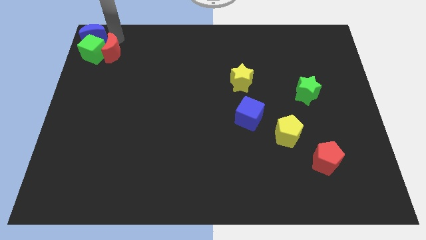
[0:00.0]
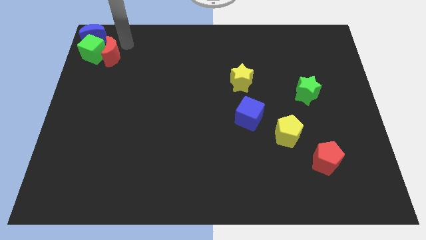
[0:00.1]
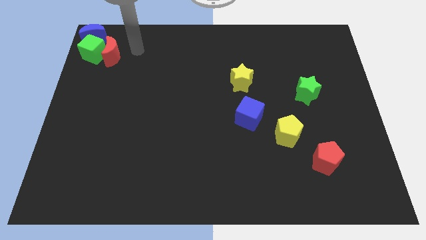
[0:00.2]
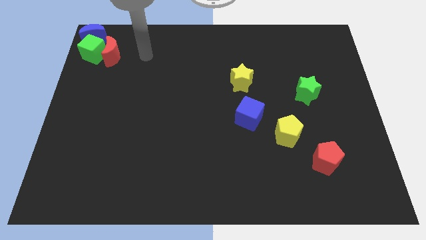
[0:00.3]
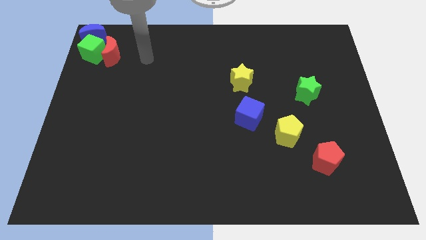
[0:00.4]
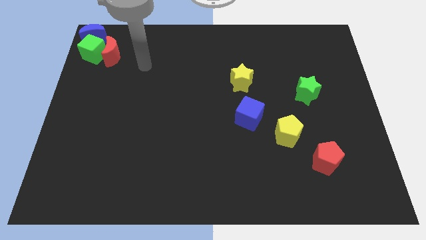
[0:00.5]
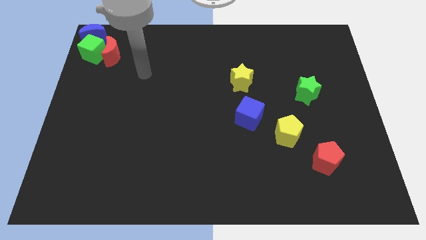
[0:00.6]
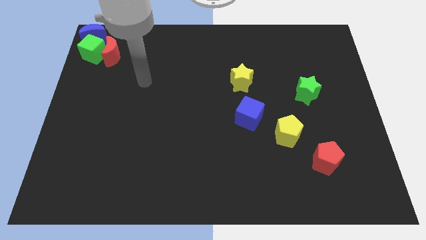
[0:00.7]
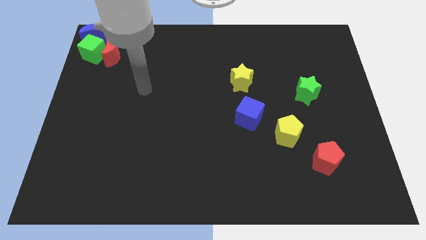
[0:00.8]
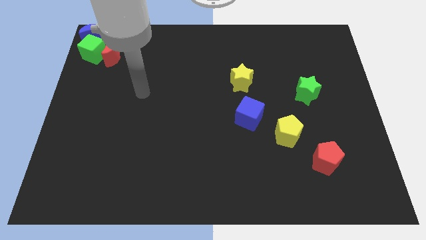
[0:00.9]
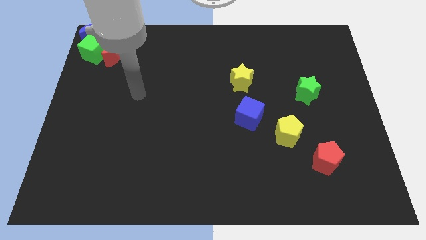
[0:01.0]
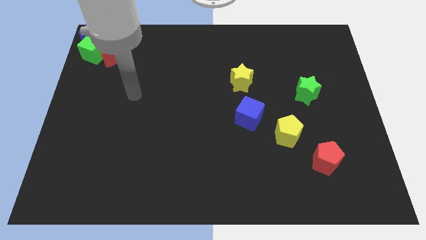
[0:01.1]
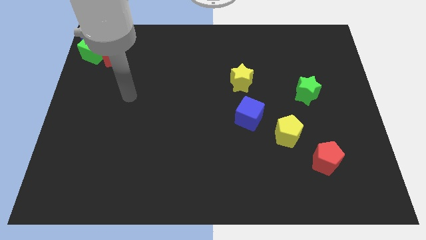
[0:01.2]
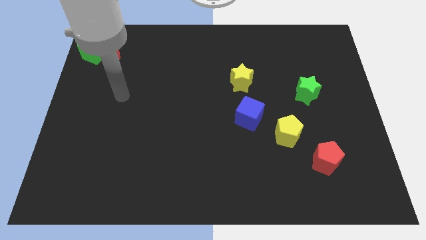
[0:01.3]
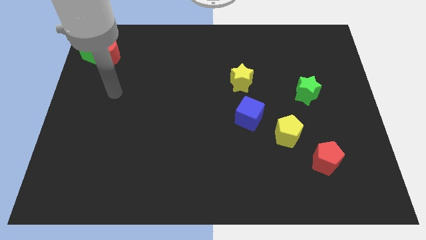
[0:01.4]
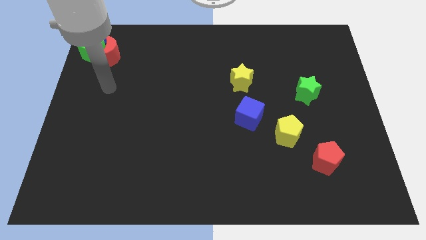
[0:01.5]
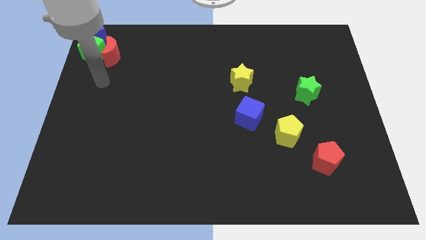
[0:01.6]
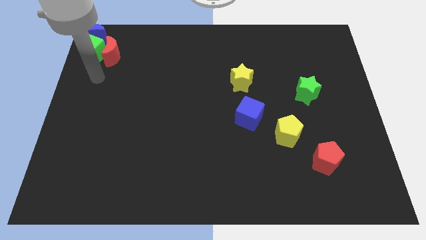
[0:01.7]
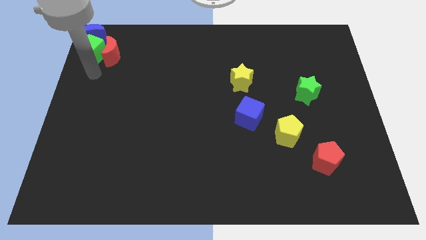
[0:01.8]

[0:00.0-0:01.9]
move your arm below the green cube

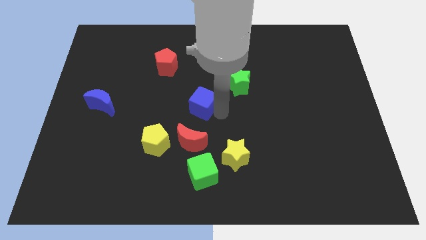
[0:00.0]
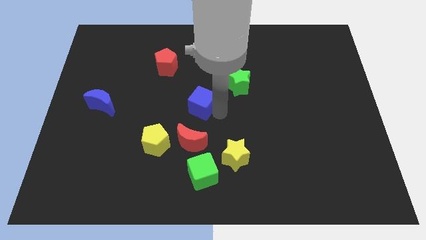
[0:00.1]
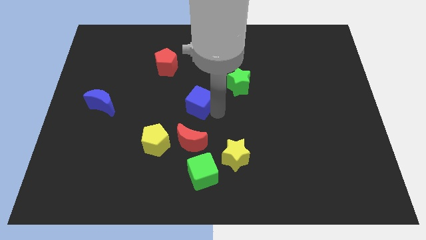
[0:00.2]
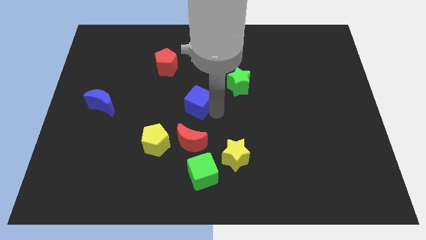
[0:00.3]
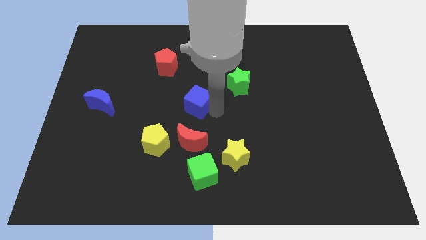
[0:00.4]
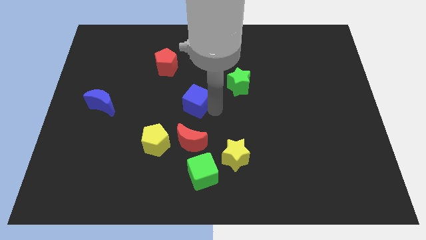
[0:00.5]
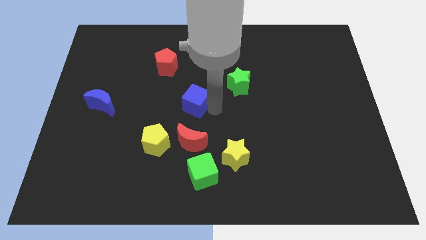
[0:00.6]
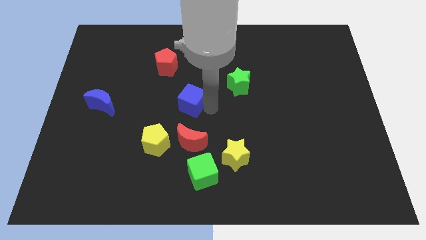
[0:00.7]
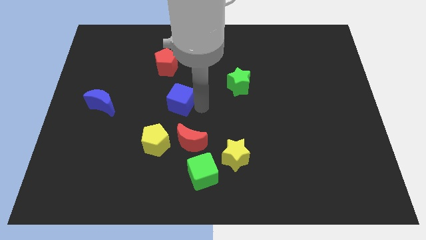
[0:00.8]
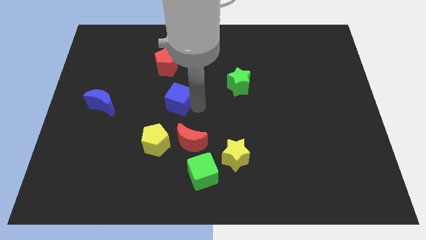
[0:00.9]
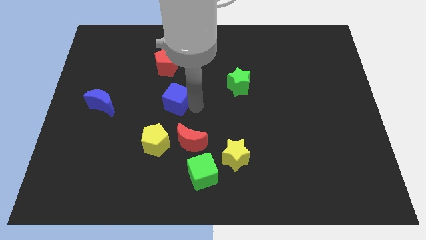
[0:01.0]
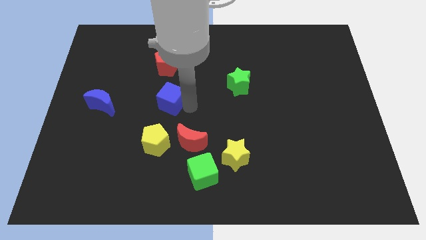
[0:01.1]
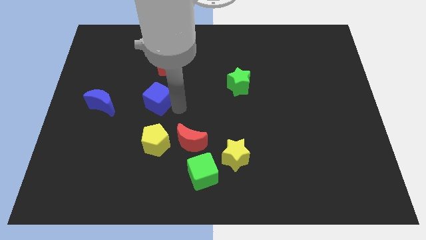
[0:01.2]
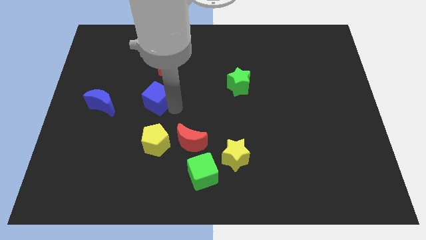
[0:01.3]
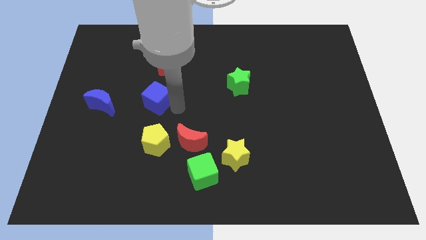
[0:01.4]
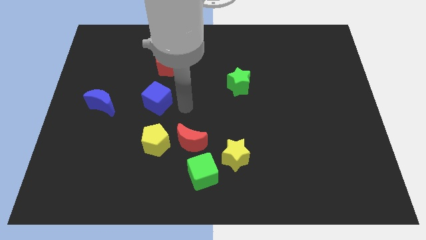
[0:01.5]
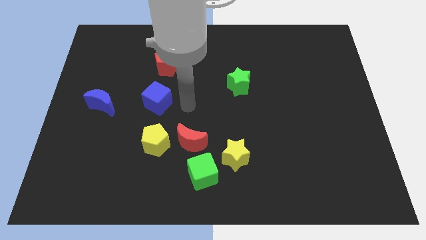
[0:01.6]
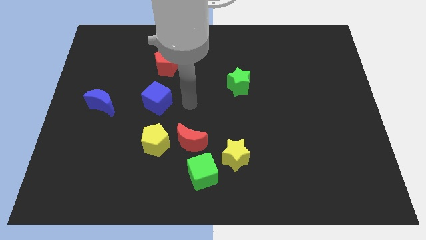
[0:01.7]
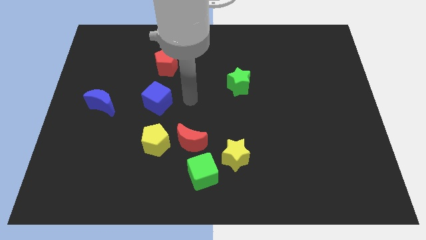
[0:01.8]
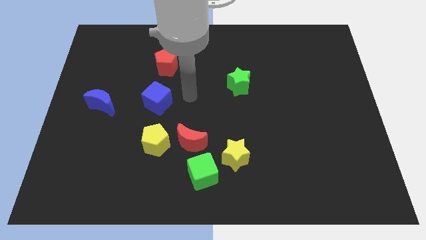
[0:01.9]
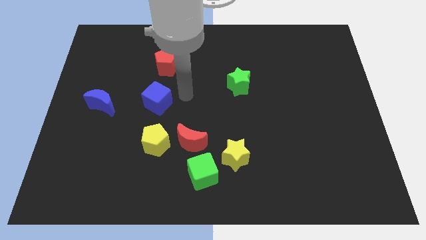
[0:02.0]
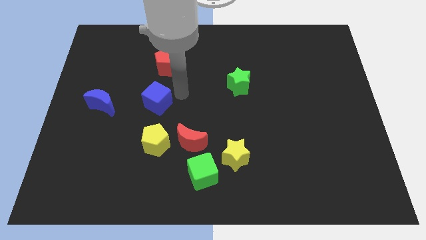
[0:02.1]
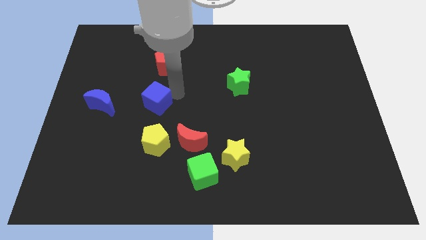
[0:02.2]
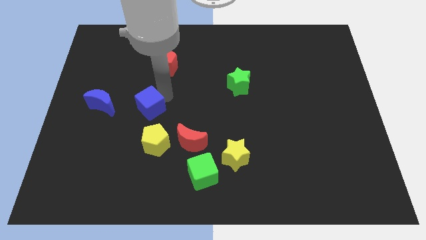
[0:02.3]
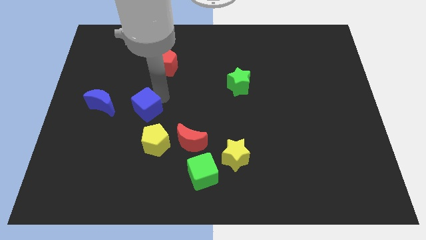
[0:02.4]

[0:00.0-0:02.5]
push blue cube above yellow pentagon

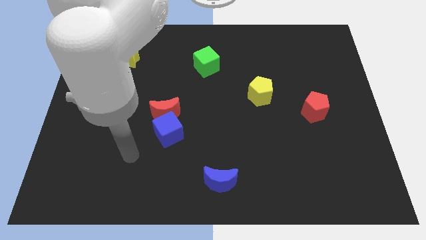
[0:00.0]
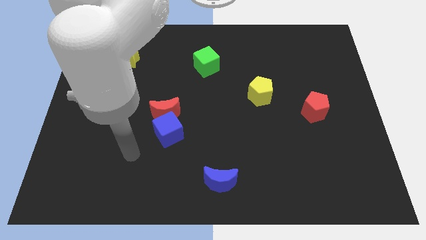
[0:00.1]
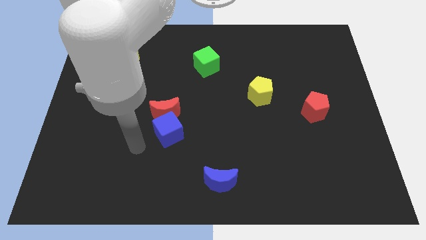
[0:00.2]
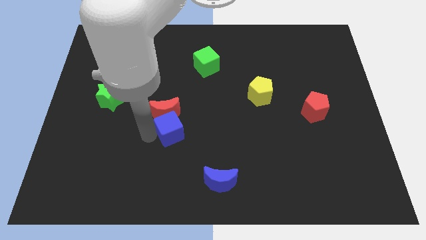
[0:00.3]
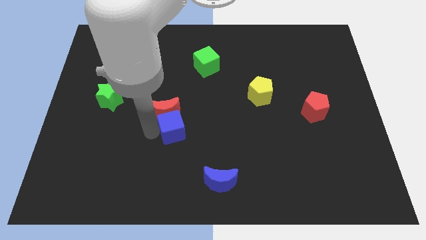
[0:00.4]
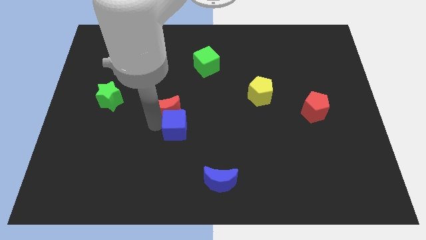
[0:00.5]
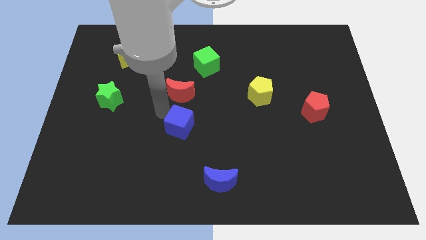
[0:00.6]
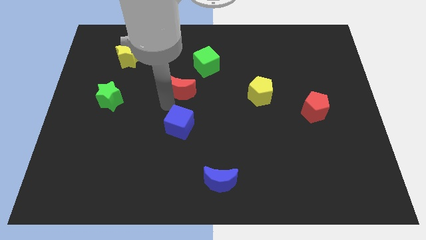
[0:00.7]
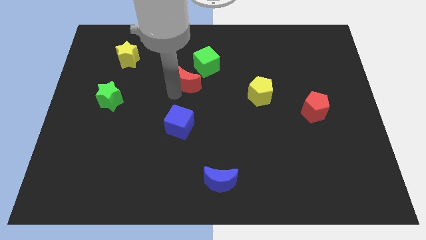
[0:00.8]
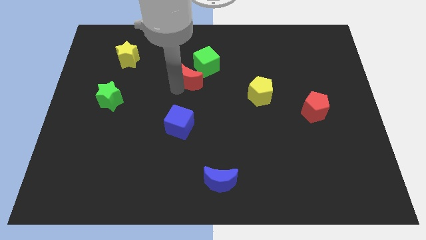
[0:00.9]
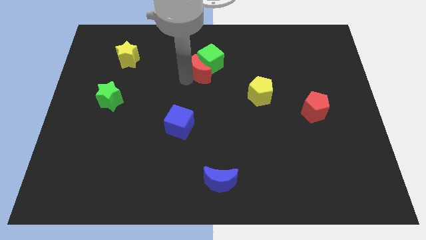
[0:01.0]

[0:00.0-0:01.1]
move red moon close to the green cube

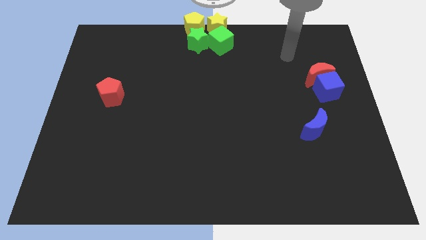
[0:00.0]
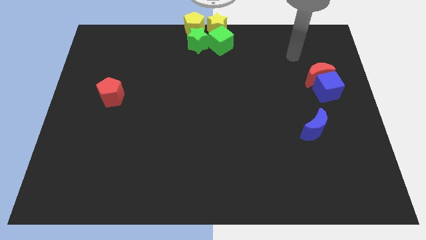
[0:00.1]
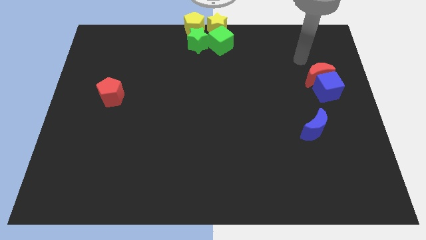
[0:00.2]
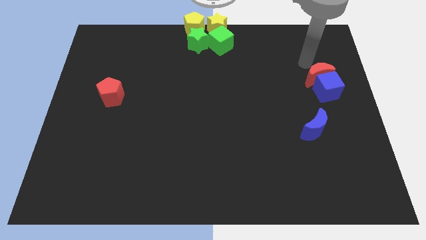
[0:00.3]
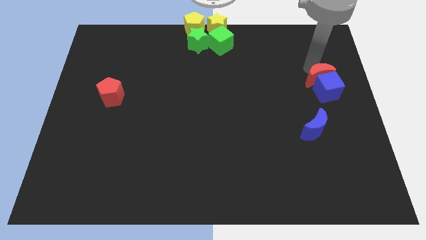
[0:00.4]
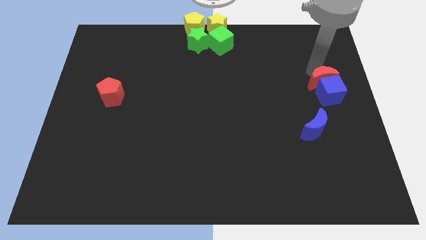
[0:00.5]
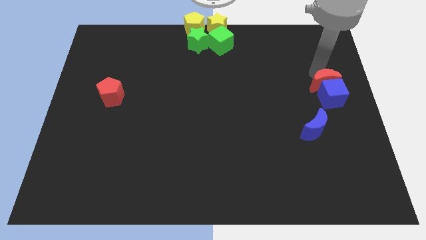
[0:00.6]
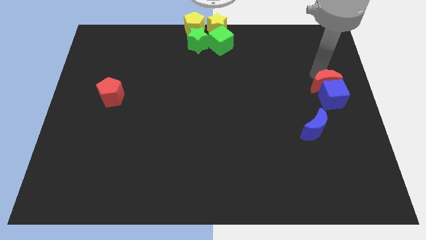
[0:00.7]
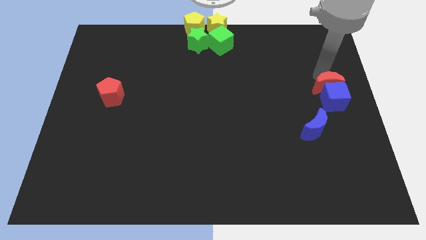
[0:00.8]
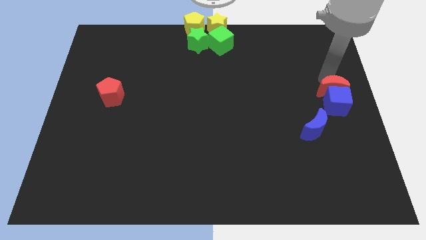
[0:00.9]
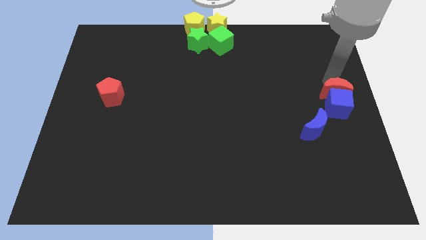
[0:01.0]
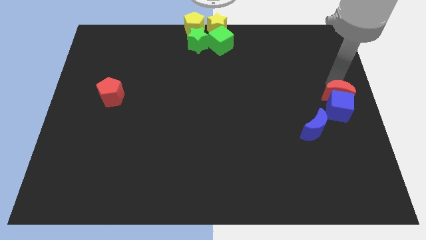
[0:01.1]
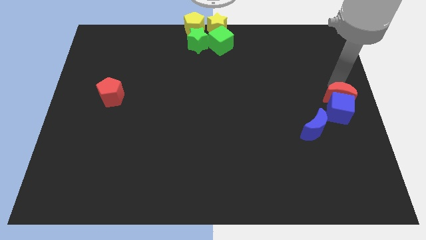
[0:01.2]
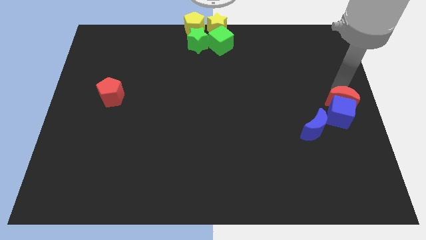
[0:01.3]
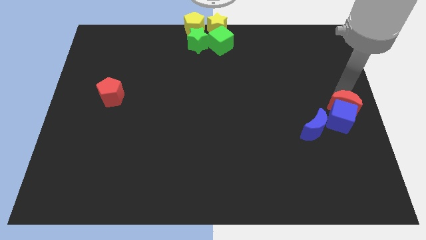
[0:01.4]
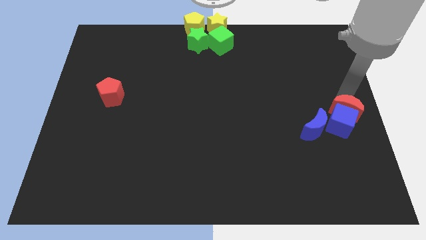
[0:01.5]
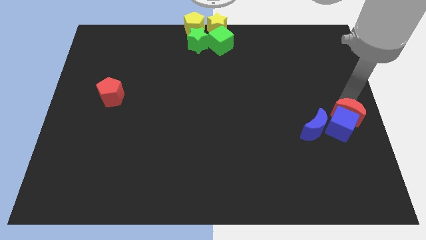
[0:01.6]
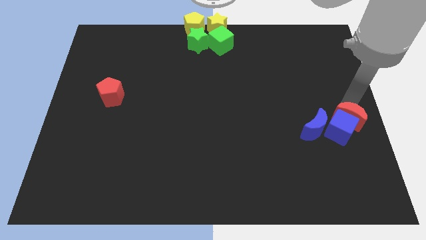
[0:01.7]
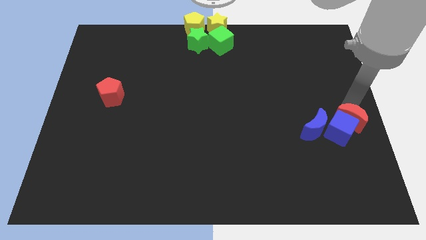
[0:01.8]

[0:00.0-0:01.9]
push the blue cube with the red crescent towards the bottom left of the board

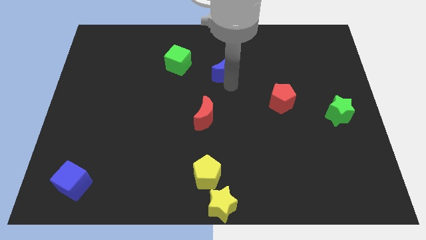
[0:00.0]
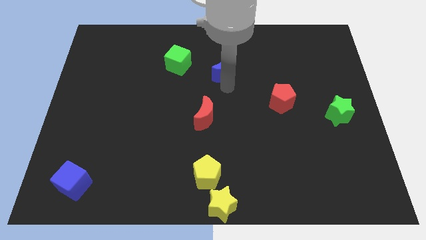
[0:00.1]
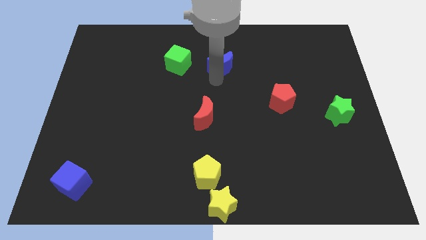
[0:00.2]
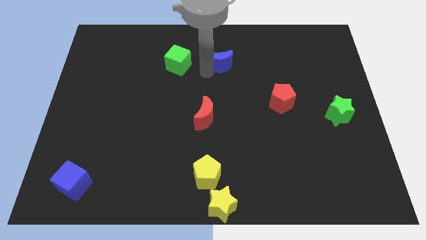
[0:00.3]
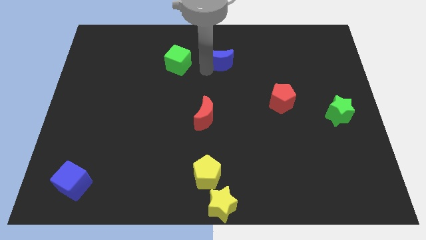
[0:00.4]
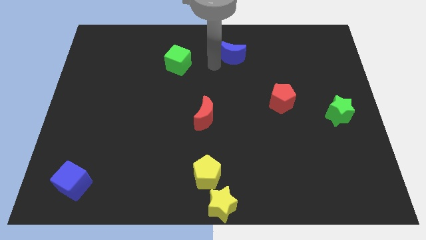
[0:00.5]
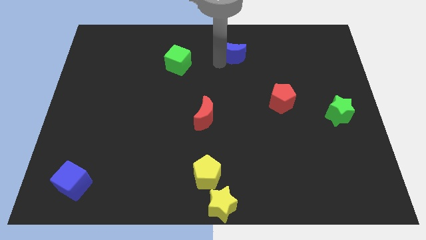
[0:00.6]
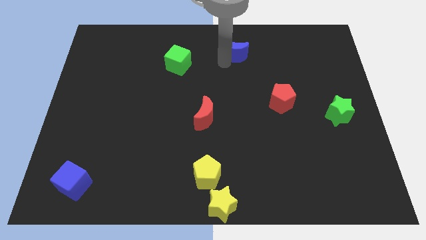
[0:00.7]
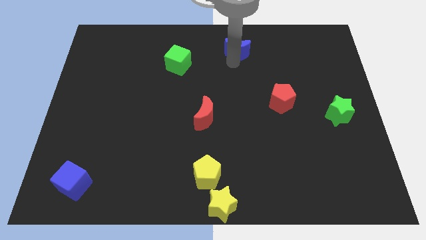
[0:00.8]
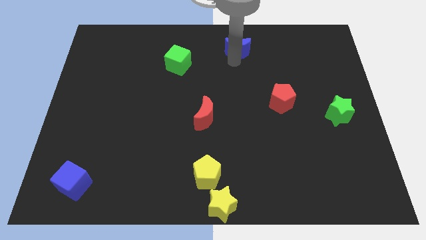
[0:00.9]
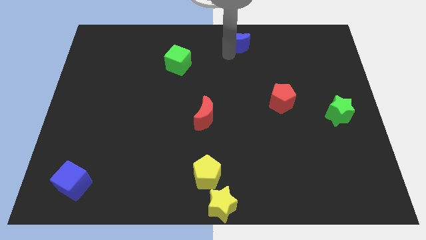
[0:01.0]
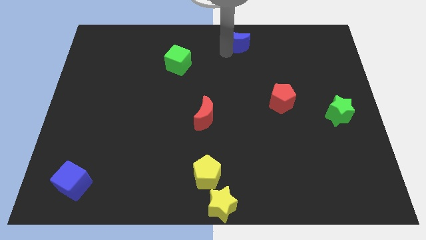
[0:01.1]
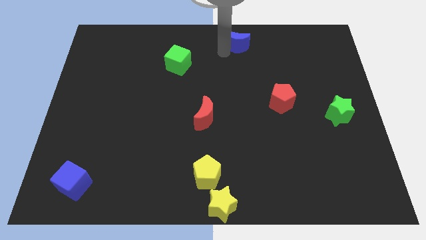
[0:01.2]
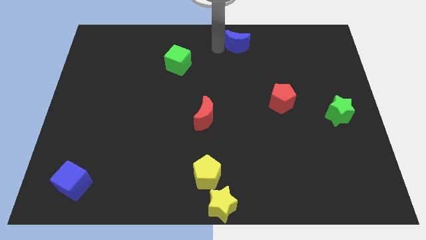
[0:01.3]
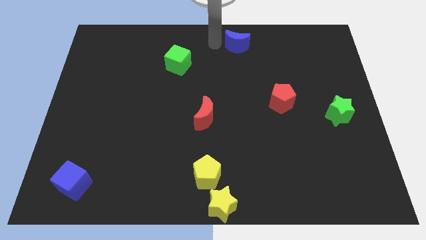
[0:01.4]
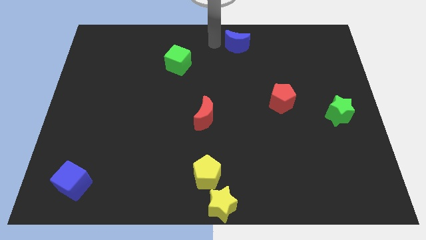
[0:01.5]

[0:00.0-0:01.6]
slide the blue moon diagonally on the top right side of the red crescent
